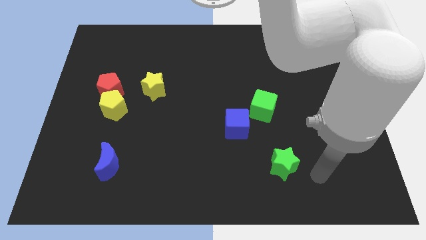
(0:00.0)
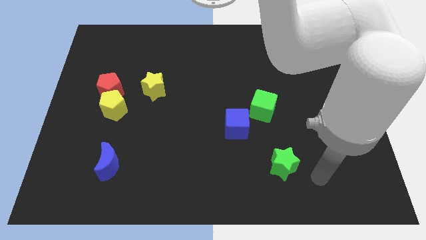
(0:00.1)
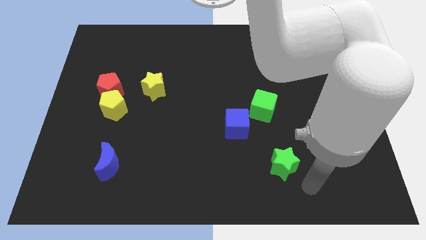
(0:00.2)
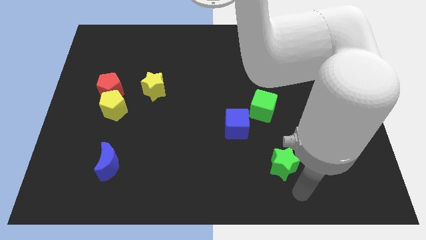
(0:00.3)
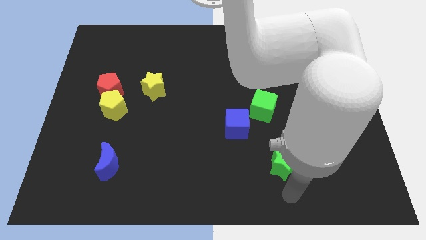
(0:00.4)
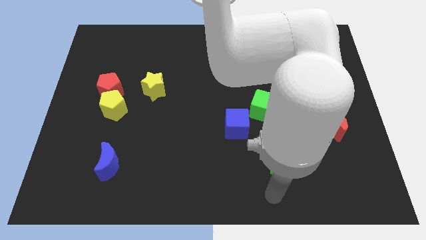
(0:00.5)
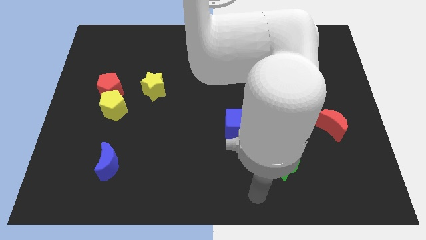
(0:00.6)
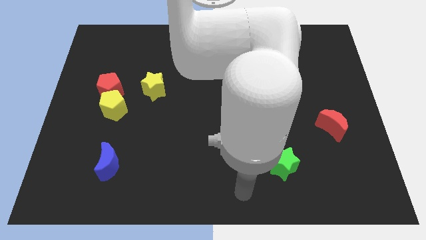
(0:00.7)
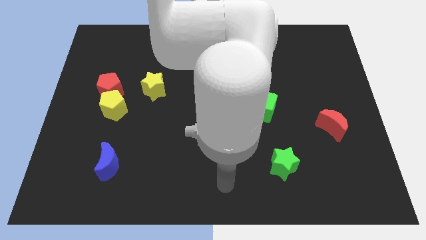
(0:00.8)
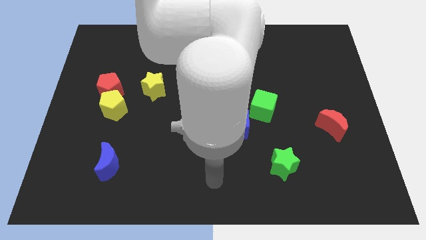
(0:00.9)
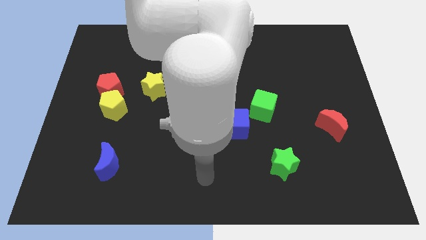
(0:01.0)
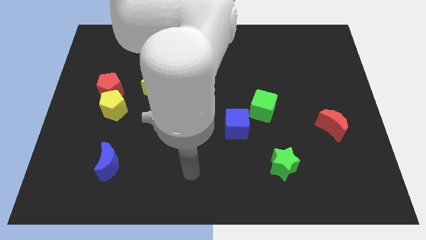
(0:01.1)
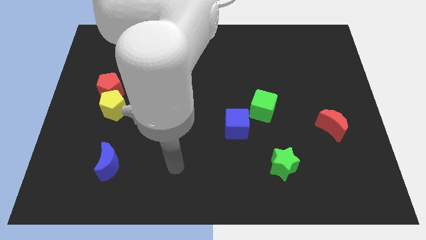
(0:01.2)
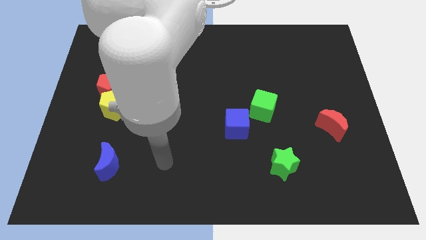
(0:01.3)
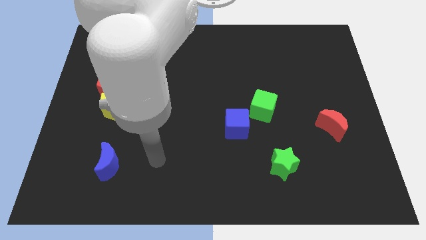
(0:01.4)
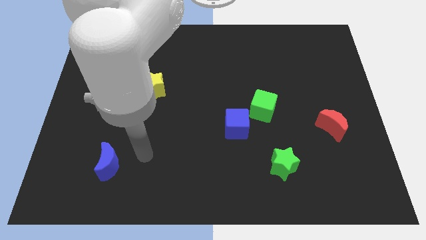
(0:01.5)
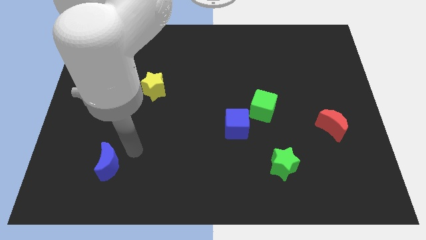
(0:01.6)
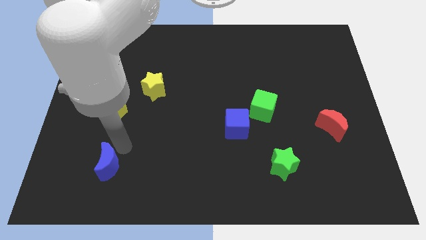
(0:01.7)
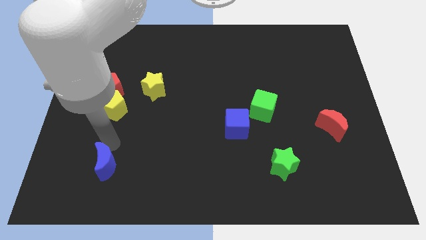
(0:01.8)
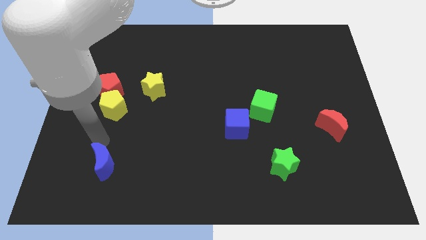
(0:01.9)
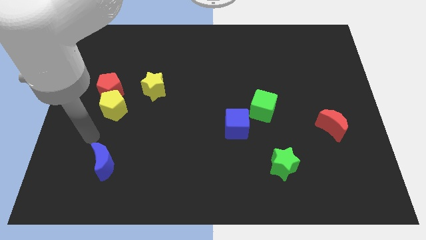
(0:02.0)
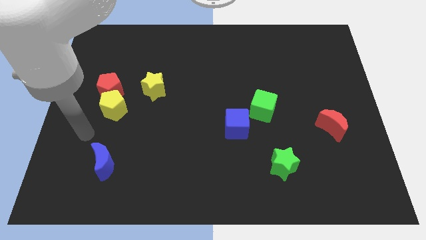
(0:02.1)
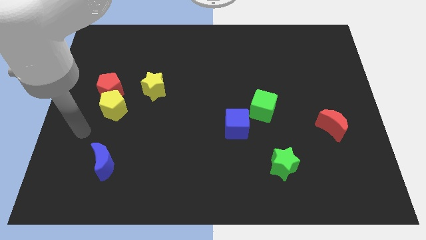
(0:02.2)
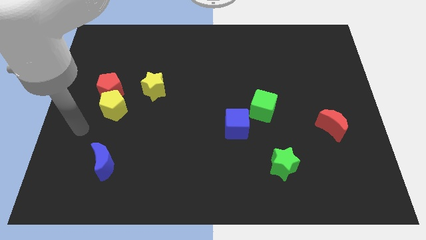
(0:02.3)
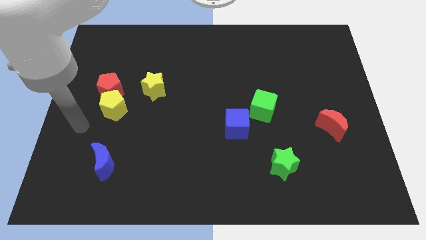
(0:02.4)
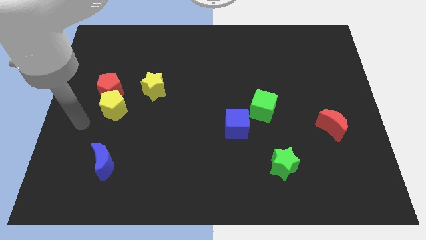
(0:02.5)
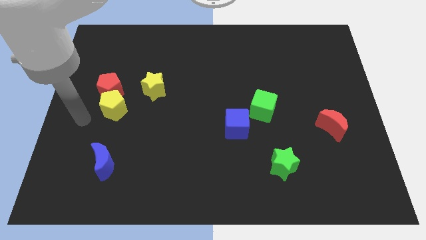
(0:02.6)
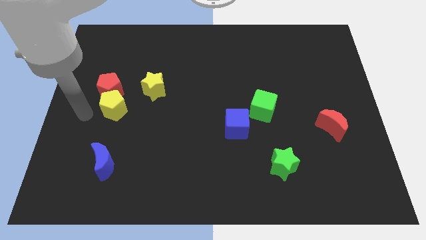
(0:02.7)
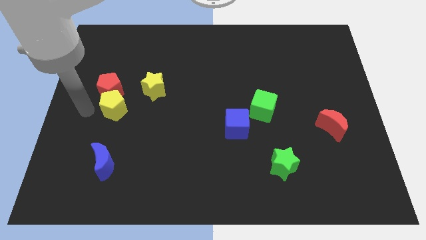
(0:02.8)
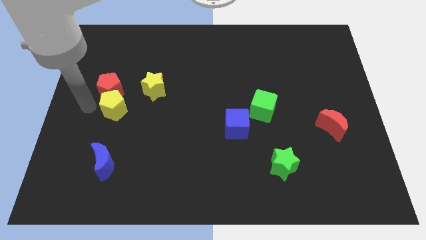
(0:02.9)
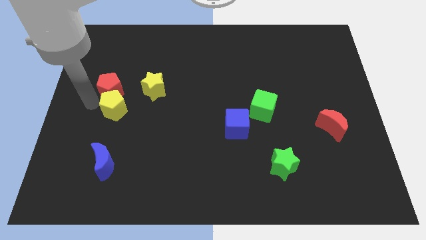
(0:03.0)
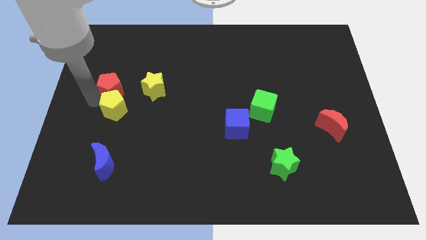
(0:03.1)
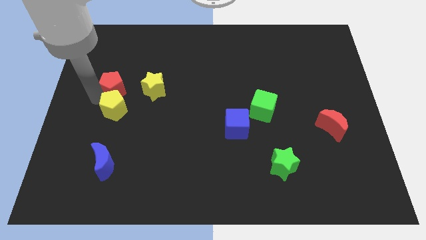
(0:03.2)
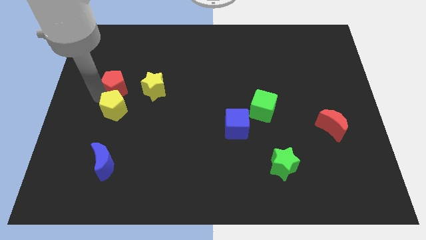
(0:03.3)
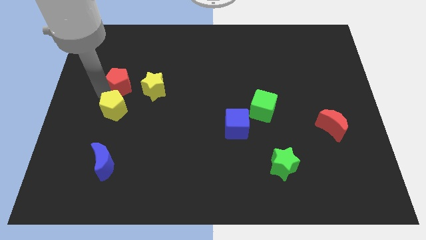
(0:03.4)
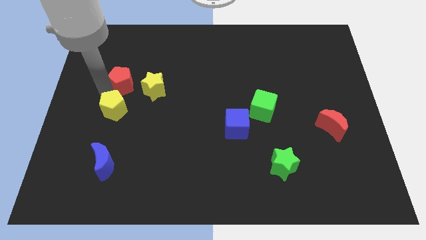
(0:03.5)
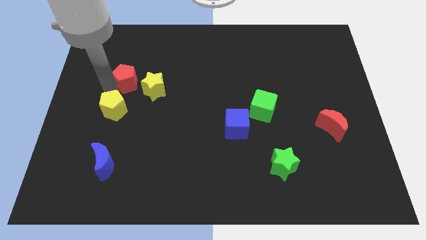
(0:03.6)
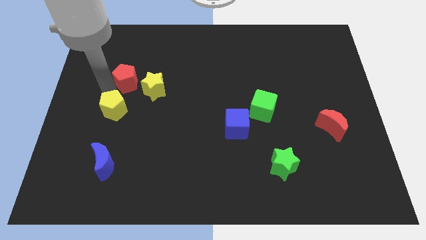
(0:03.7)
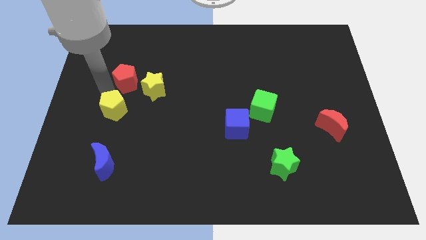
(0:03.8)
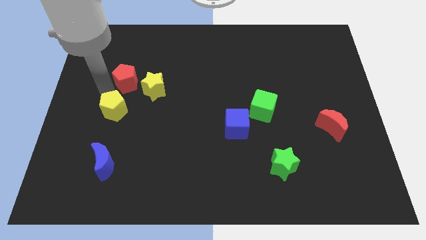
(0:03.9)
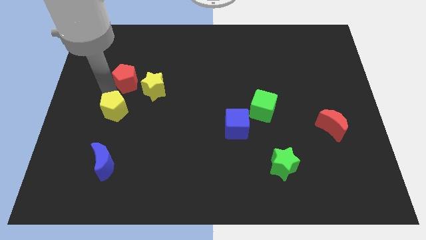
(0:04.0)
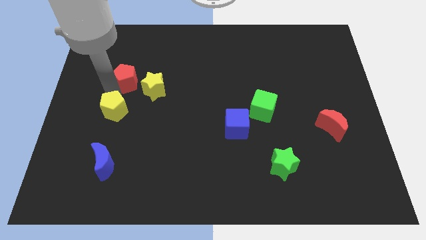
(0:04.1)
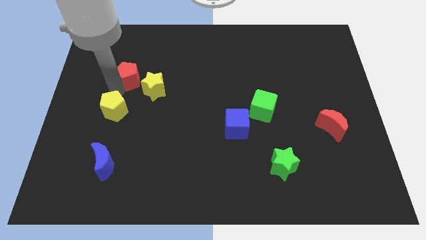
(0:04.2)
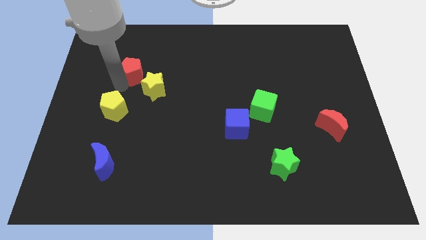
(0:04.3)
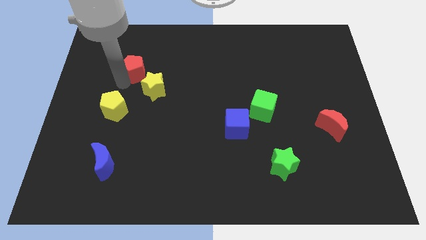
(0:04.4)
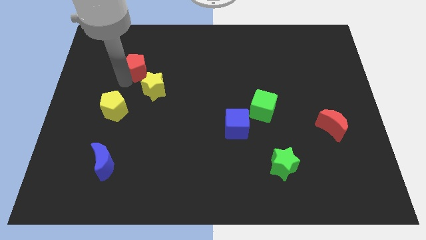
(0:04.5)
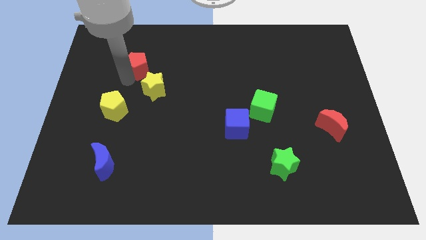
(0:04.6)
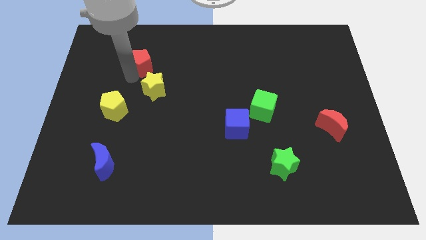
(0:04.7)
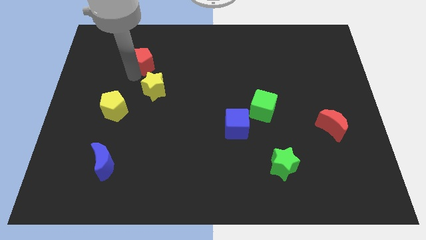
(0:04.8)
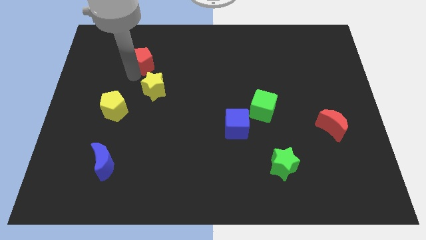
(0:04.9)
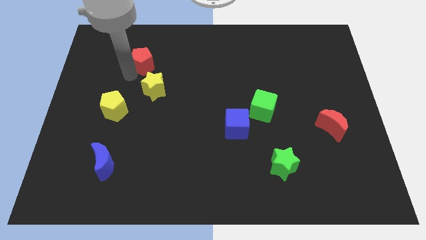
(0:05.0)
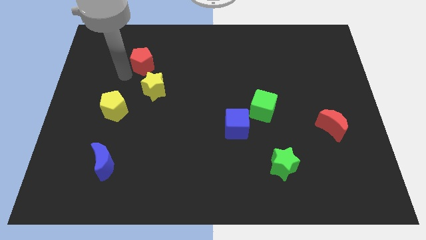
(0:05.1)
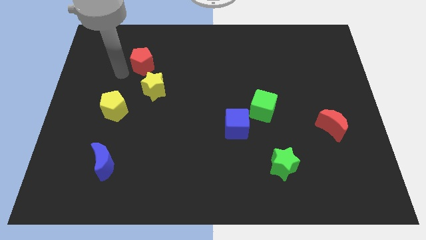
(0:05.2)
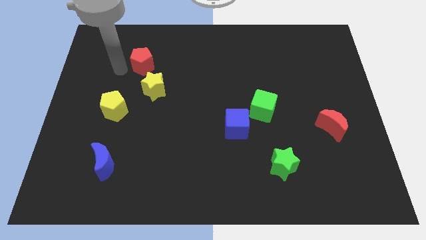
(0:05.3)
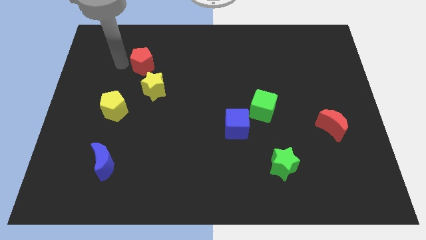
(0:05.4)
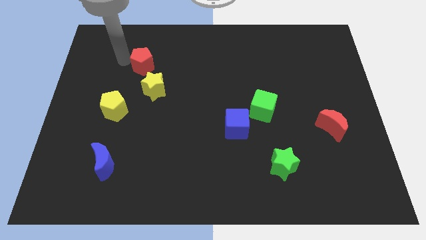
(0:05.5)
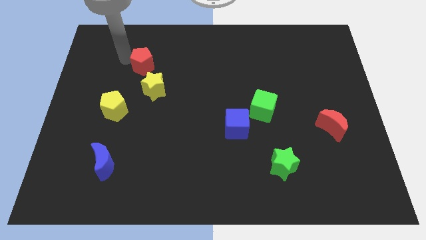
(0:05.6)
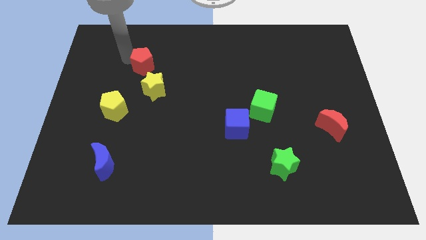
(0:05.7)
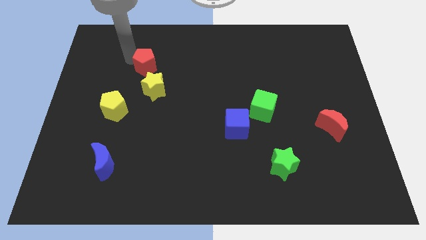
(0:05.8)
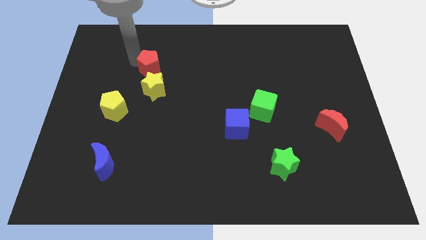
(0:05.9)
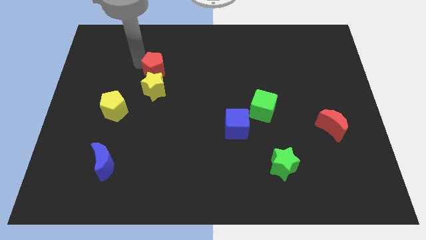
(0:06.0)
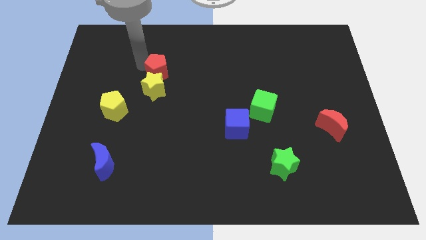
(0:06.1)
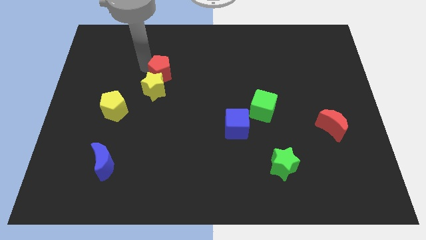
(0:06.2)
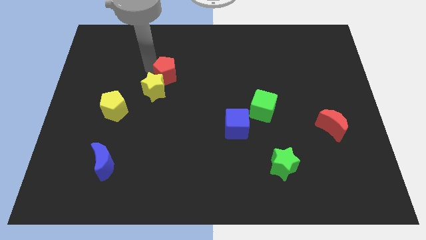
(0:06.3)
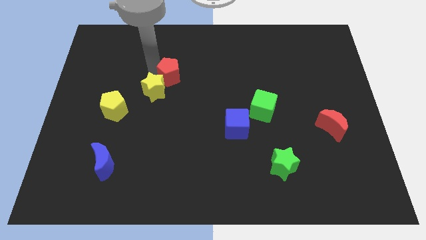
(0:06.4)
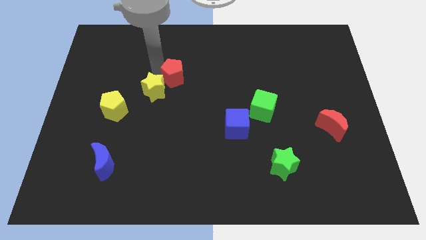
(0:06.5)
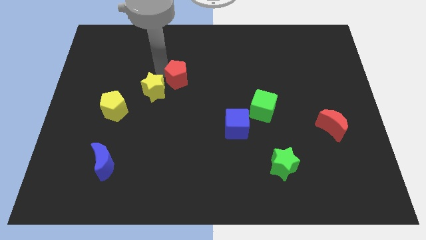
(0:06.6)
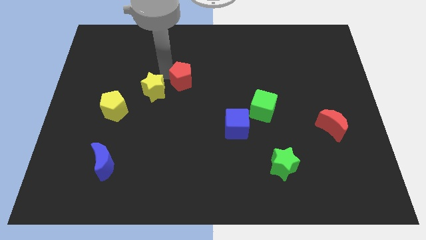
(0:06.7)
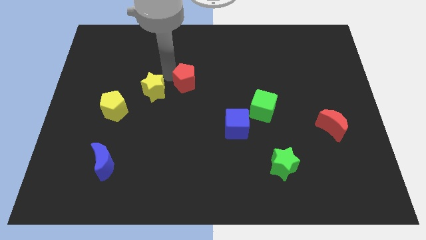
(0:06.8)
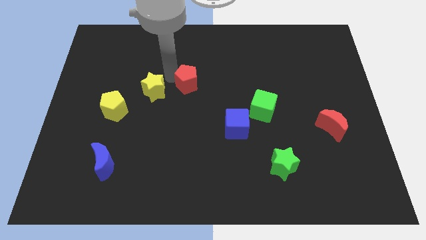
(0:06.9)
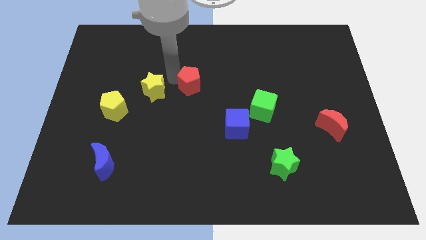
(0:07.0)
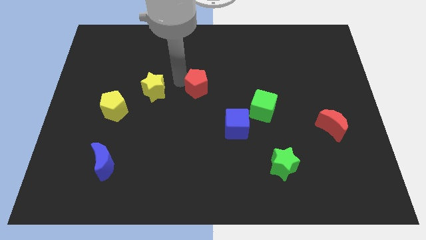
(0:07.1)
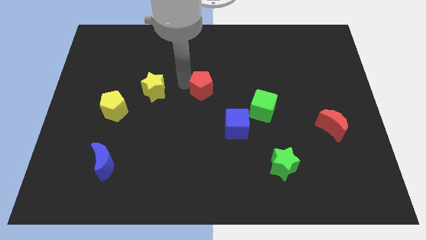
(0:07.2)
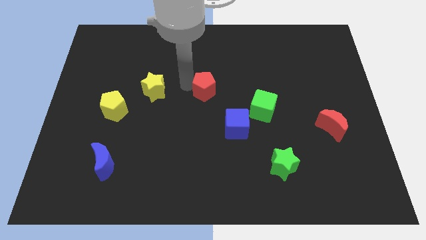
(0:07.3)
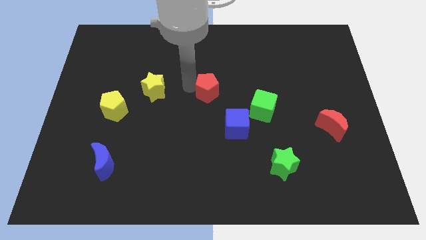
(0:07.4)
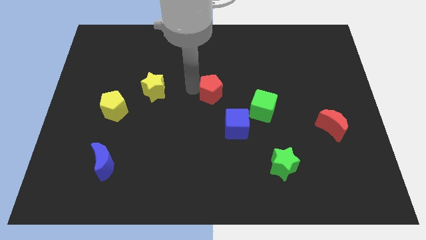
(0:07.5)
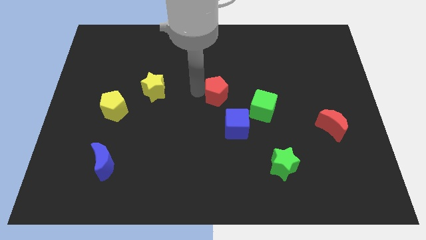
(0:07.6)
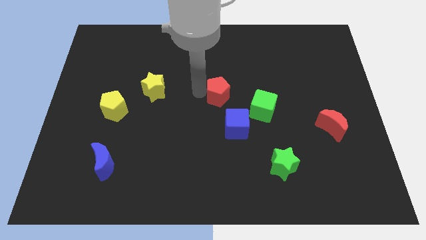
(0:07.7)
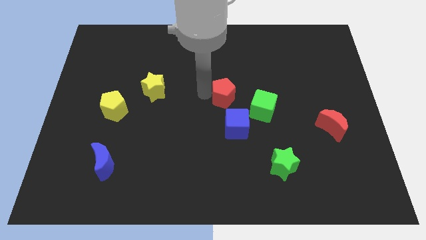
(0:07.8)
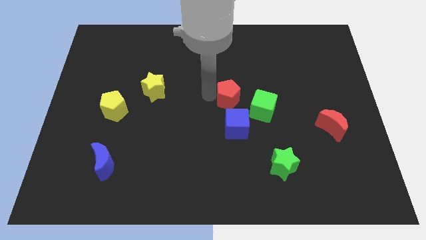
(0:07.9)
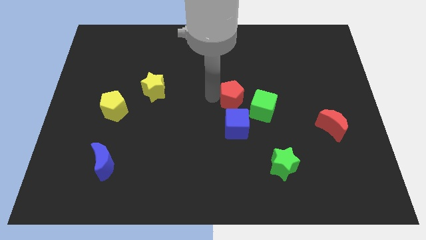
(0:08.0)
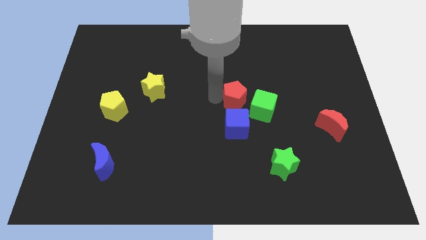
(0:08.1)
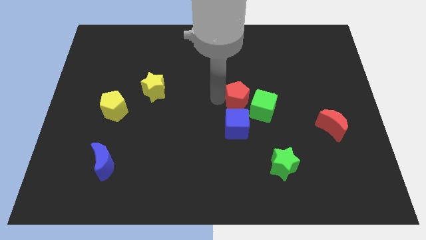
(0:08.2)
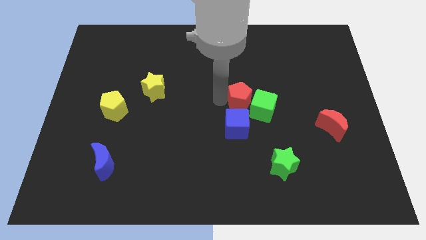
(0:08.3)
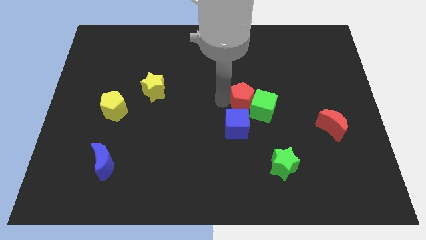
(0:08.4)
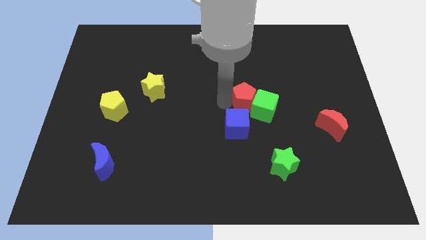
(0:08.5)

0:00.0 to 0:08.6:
move the red pentagon towards the green cube

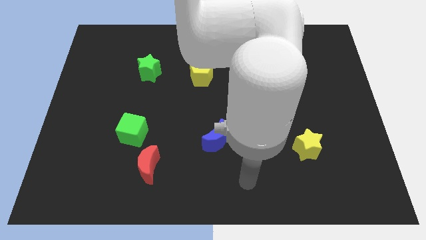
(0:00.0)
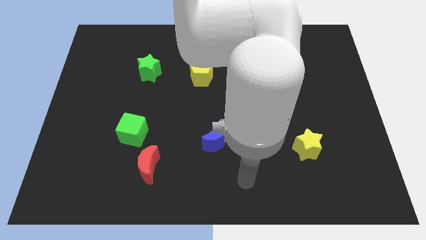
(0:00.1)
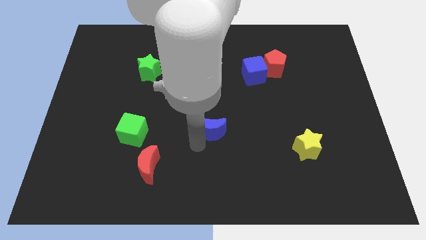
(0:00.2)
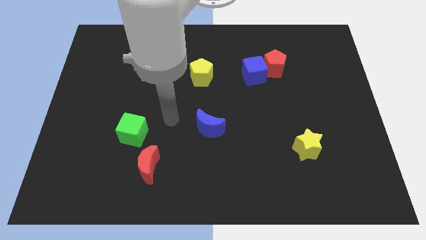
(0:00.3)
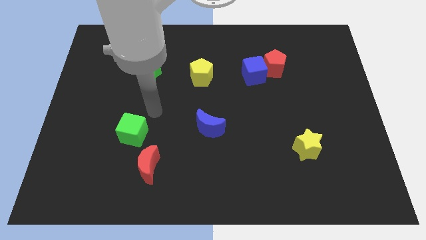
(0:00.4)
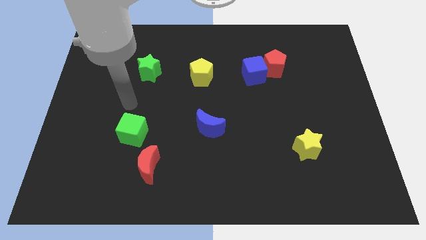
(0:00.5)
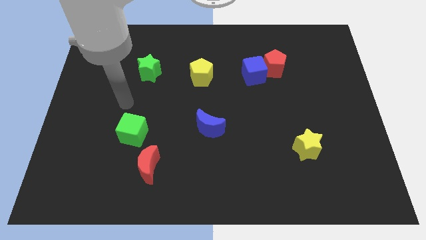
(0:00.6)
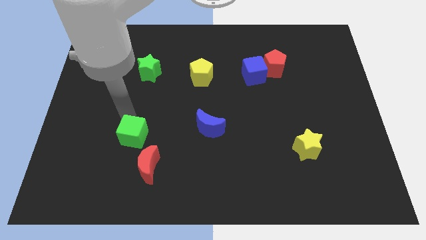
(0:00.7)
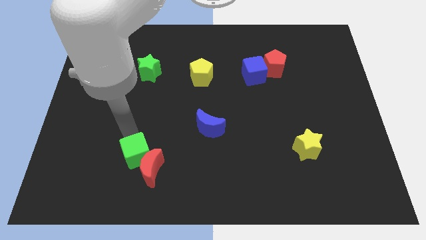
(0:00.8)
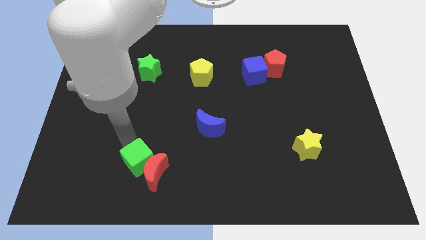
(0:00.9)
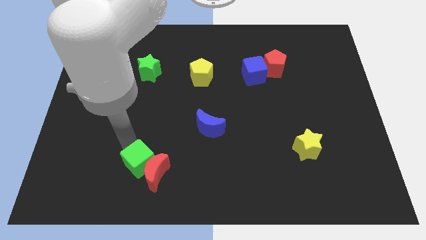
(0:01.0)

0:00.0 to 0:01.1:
slide the green cube towards the red moon
